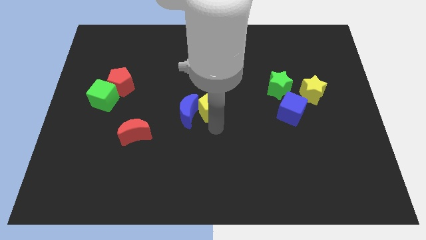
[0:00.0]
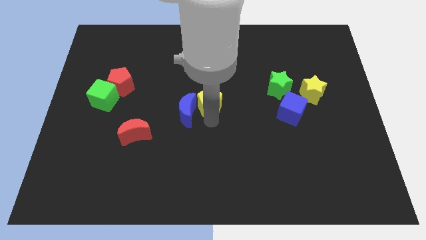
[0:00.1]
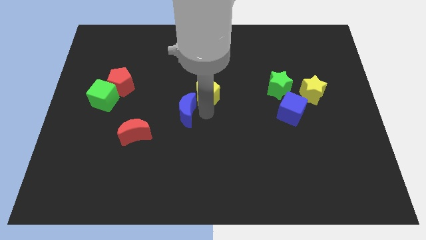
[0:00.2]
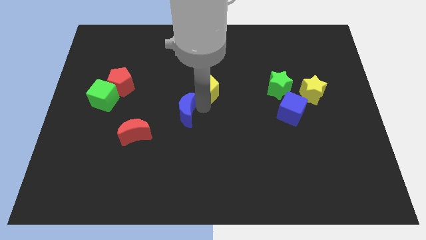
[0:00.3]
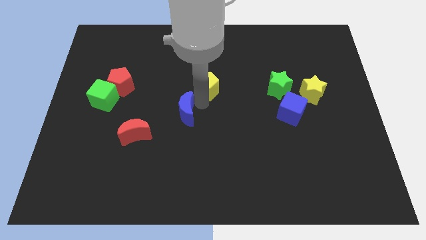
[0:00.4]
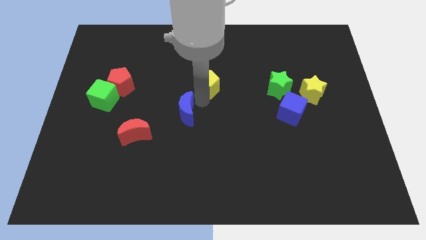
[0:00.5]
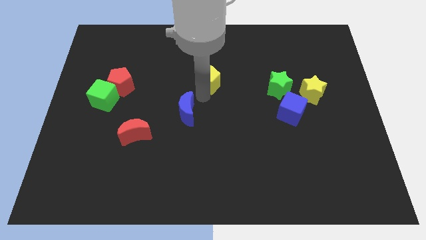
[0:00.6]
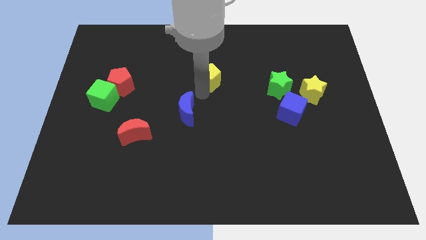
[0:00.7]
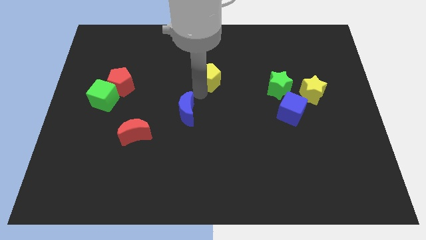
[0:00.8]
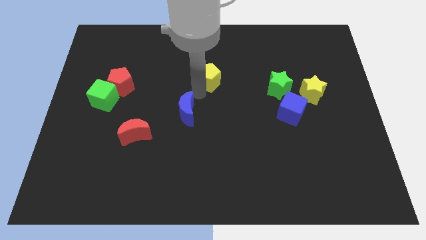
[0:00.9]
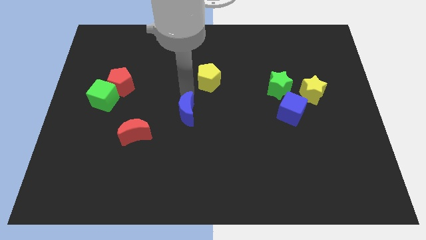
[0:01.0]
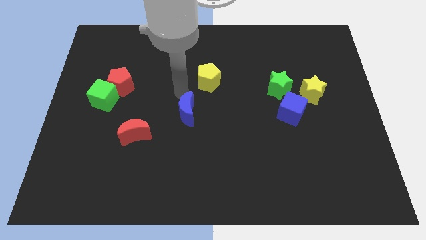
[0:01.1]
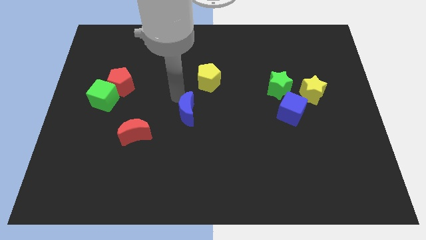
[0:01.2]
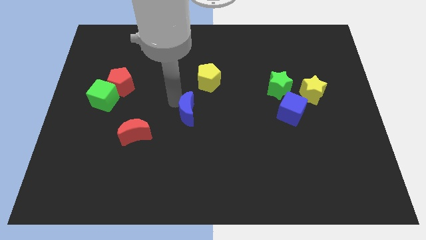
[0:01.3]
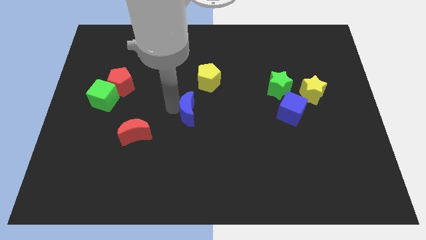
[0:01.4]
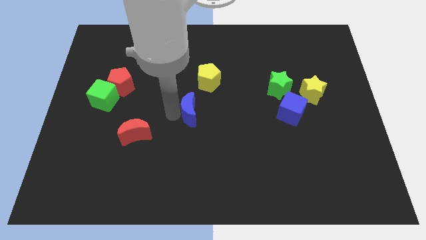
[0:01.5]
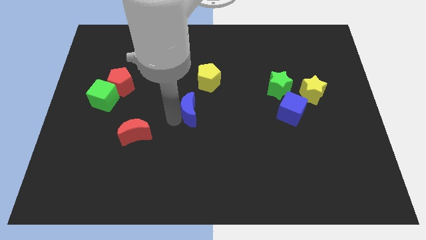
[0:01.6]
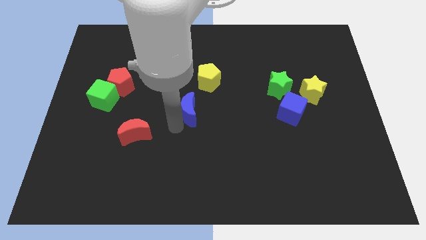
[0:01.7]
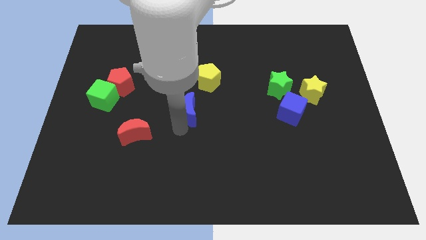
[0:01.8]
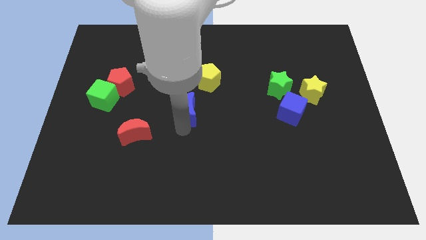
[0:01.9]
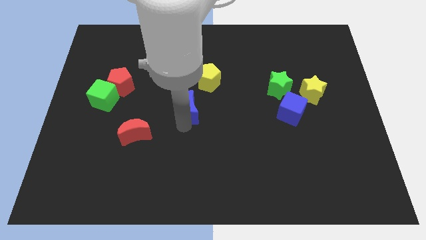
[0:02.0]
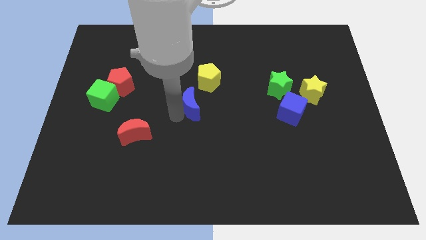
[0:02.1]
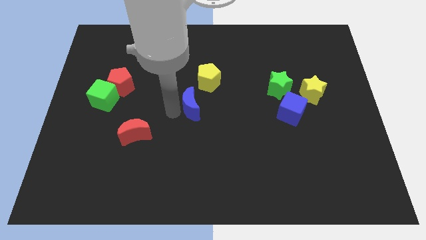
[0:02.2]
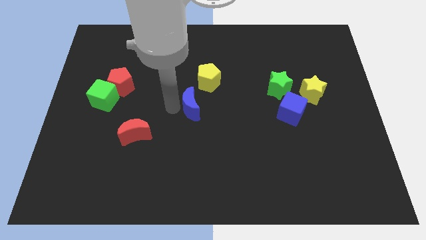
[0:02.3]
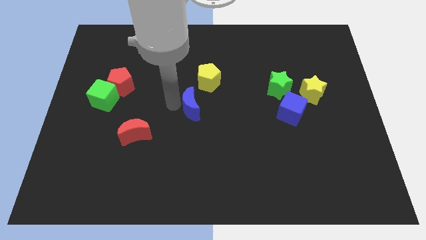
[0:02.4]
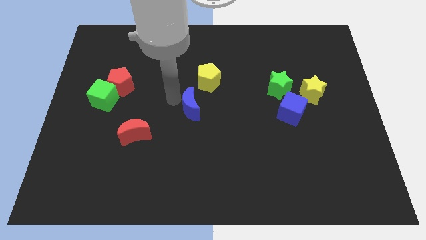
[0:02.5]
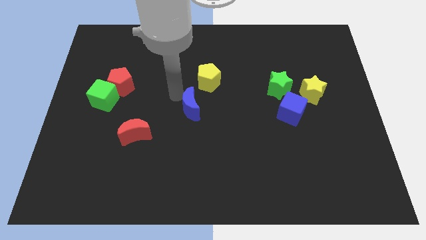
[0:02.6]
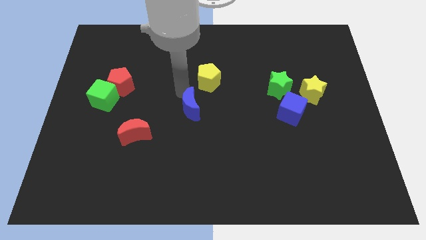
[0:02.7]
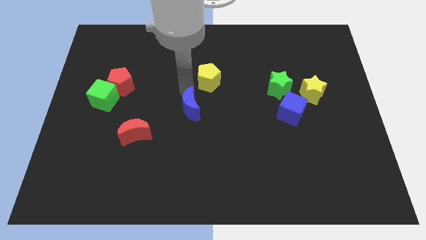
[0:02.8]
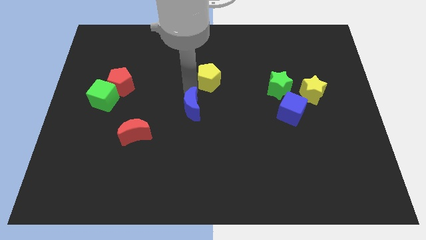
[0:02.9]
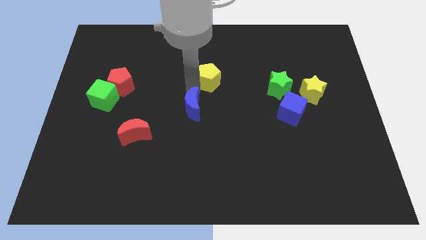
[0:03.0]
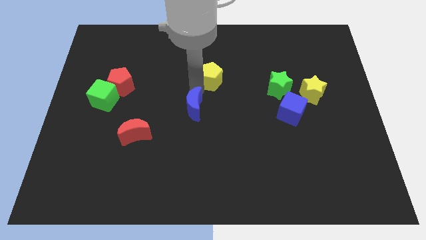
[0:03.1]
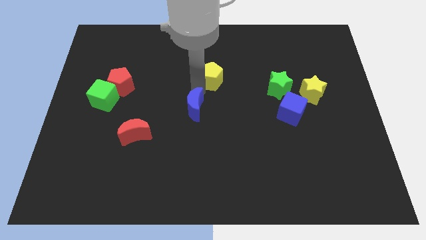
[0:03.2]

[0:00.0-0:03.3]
place your arm in between the yellow pentagon and the blue moon

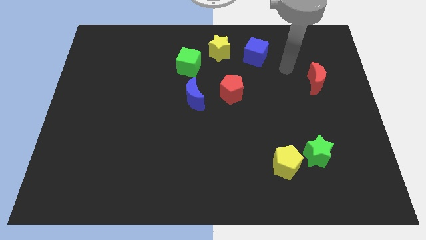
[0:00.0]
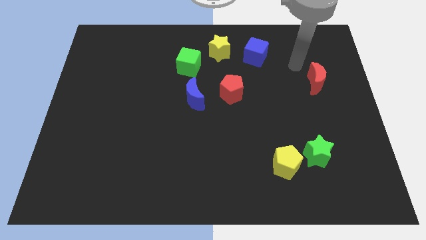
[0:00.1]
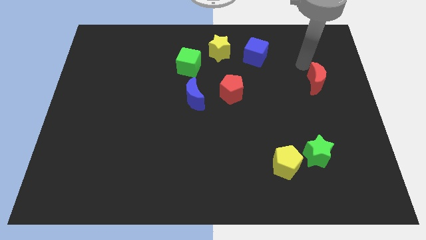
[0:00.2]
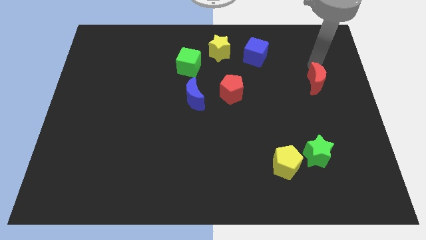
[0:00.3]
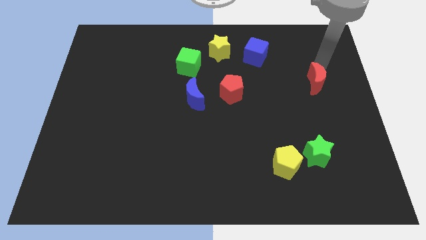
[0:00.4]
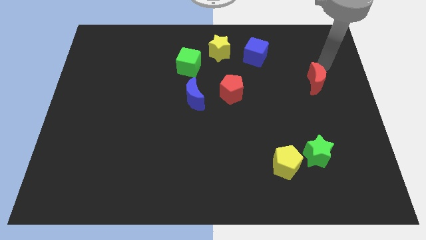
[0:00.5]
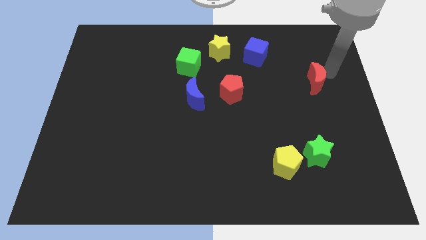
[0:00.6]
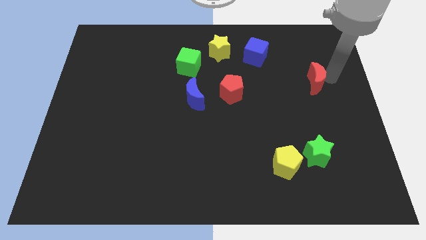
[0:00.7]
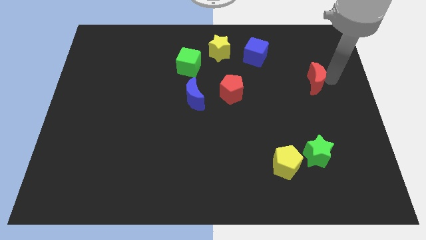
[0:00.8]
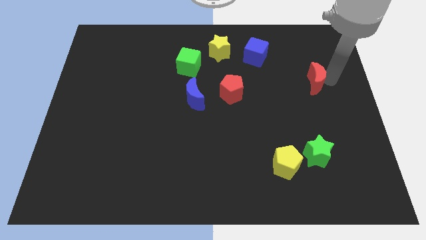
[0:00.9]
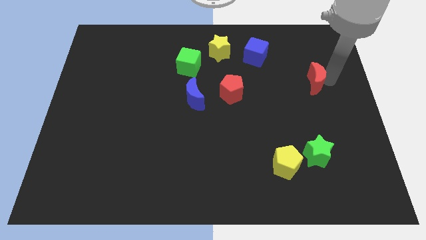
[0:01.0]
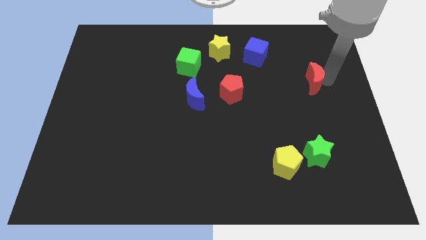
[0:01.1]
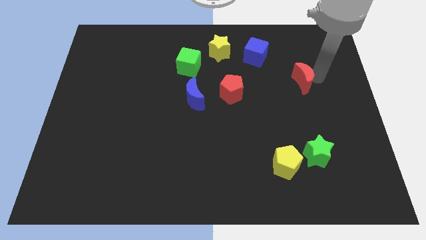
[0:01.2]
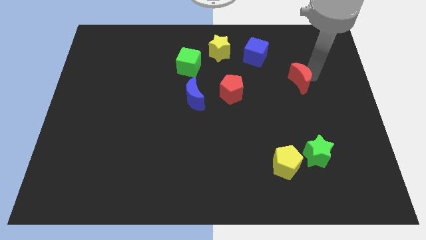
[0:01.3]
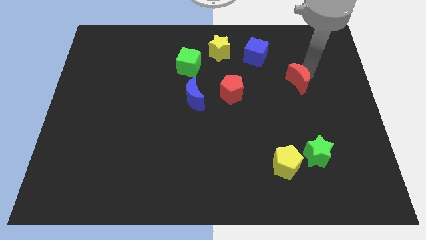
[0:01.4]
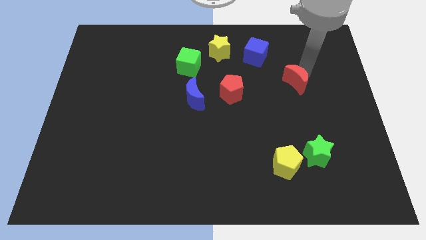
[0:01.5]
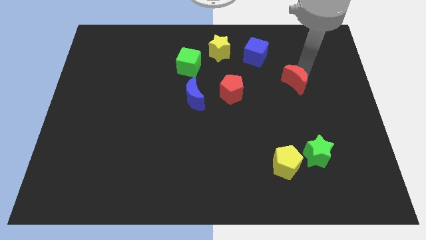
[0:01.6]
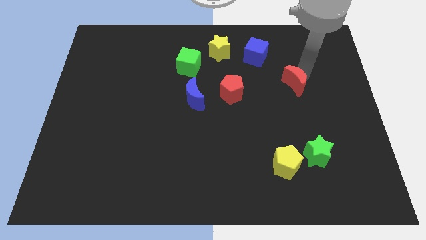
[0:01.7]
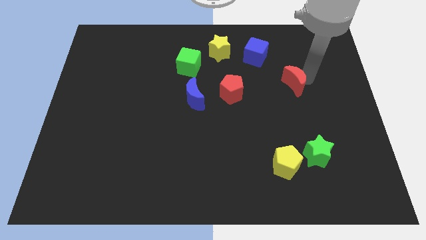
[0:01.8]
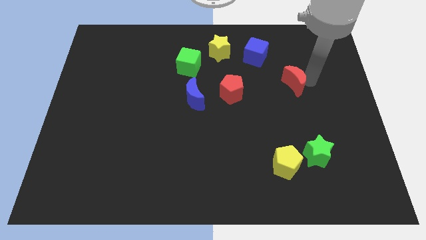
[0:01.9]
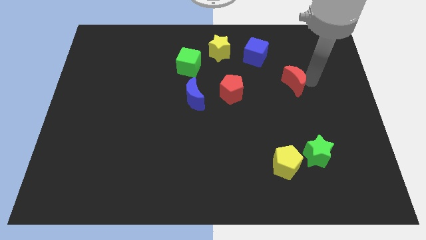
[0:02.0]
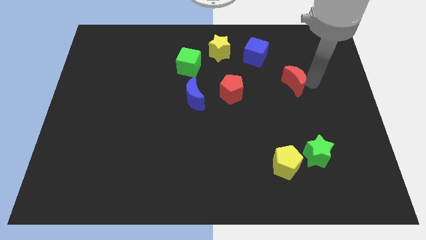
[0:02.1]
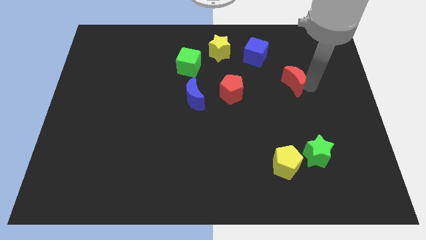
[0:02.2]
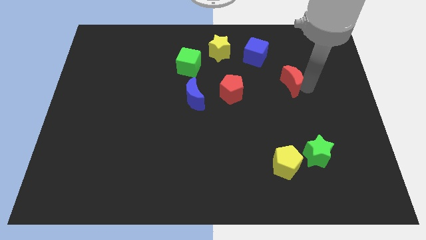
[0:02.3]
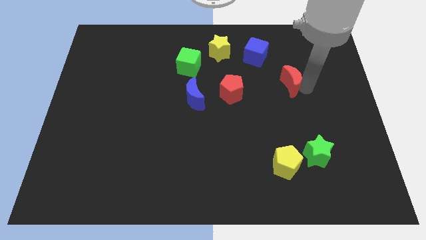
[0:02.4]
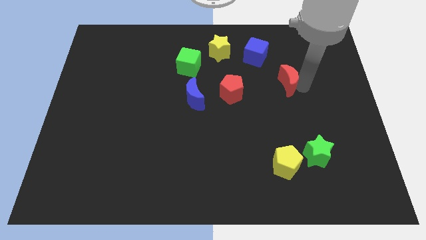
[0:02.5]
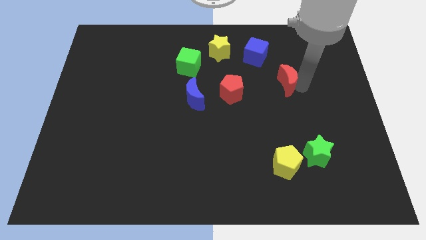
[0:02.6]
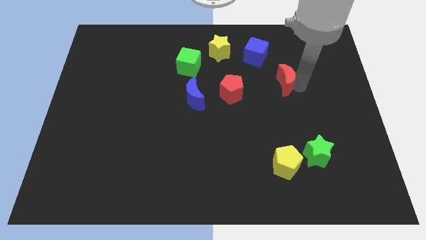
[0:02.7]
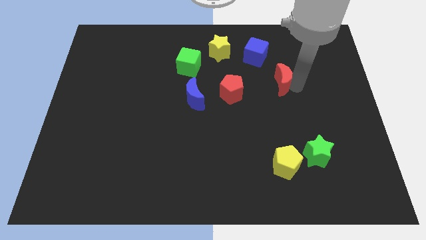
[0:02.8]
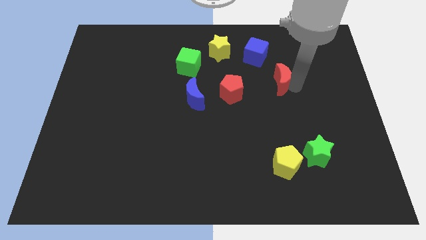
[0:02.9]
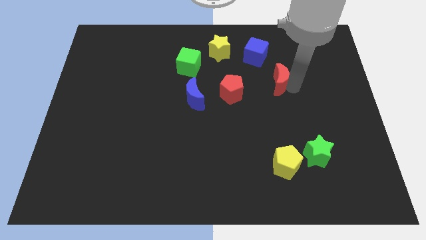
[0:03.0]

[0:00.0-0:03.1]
move red moon towards red pentagon

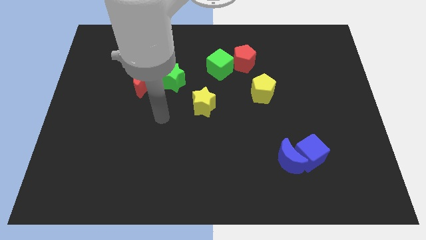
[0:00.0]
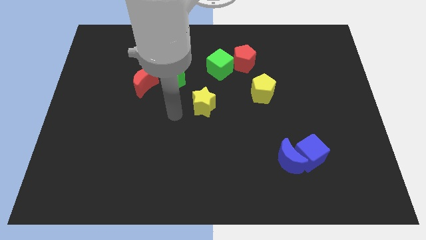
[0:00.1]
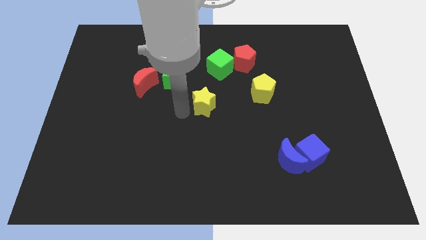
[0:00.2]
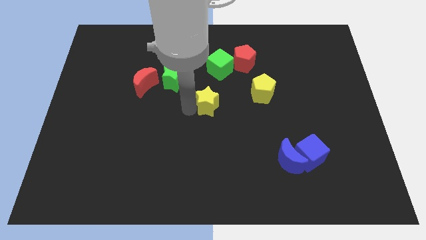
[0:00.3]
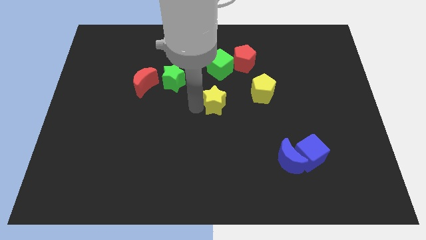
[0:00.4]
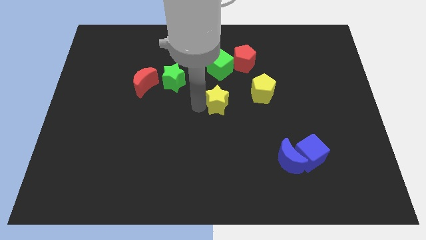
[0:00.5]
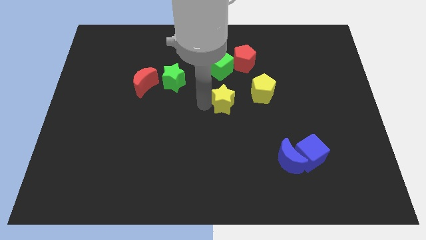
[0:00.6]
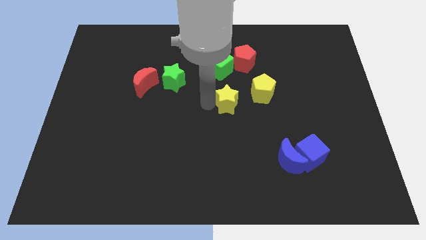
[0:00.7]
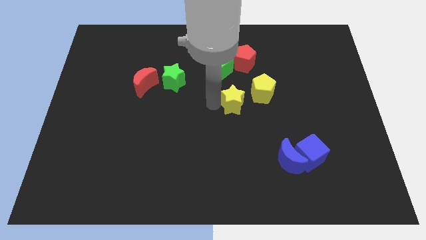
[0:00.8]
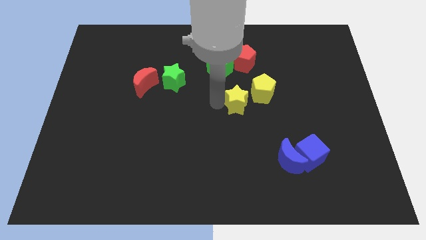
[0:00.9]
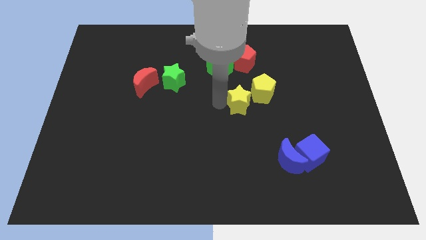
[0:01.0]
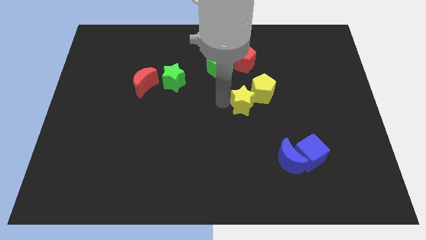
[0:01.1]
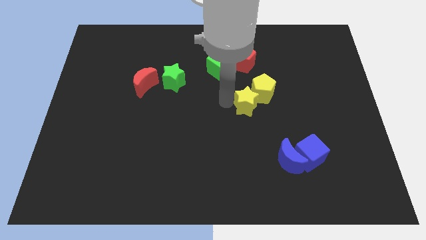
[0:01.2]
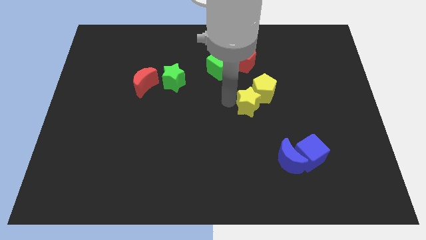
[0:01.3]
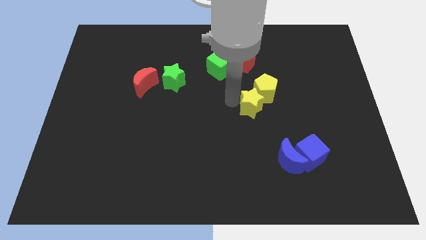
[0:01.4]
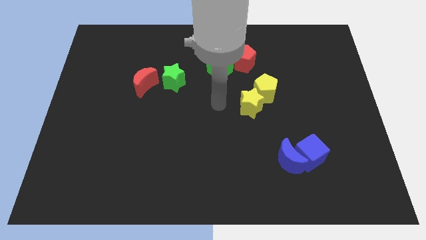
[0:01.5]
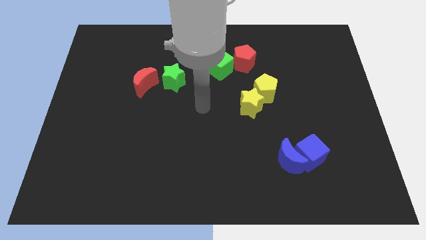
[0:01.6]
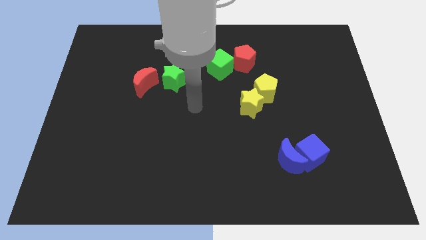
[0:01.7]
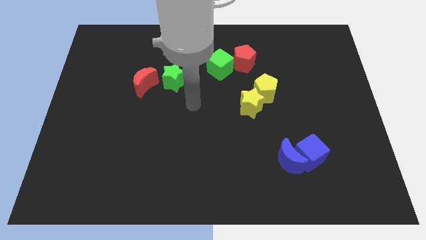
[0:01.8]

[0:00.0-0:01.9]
slide the yellow star to the bottom left of yellow pentagon

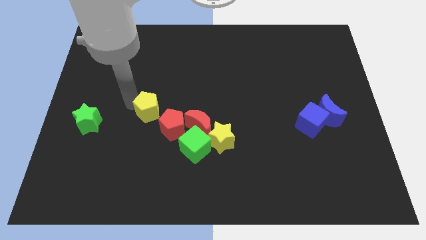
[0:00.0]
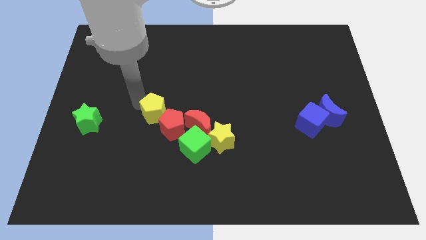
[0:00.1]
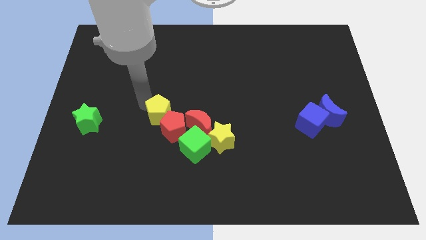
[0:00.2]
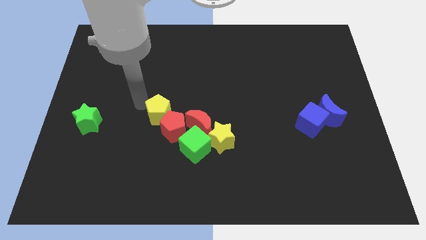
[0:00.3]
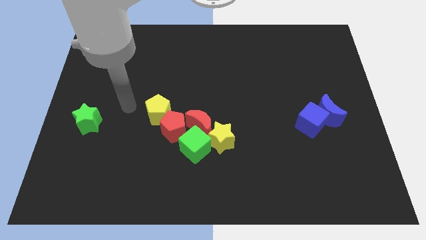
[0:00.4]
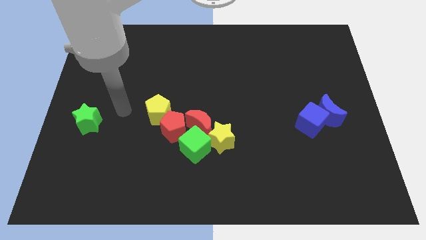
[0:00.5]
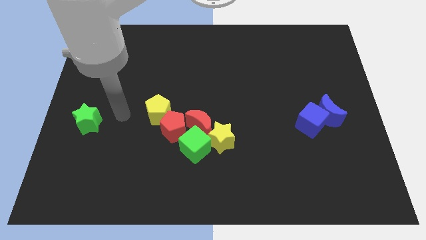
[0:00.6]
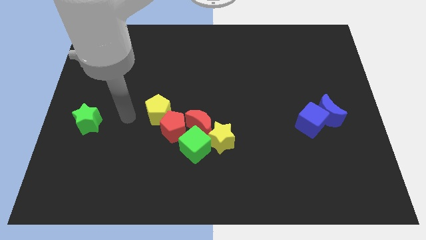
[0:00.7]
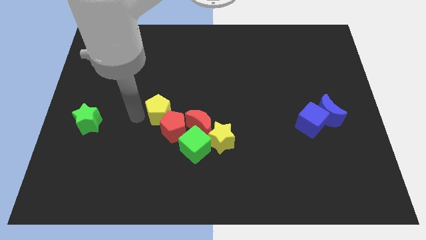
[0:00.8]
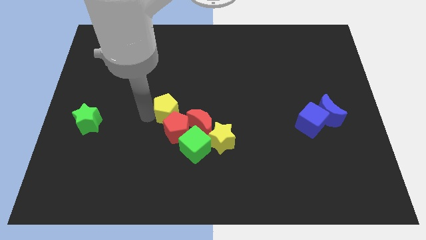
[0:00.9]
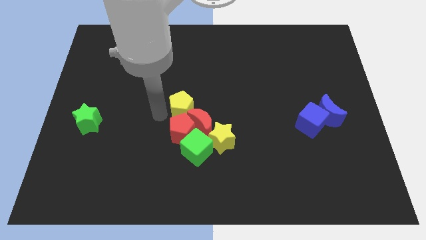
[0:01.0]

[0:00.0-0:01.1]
place yellow block above red pentagon
